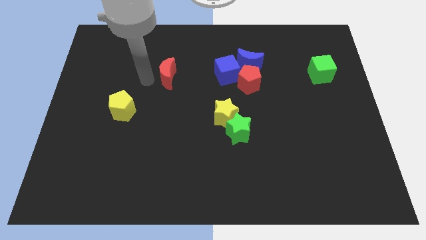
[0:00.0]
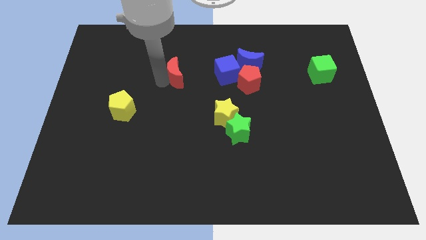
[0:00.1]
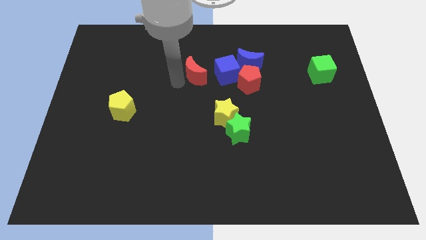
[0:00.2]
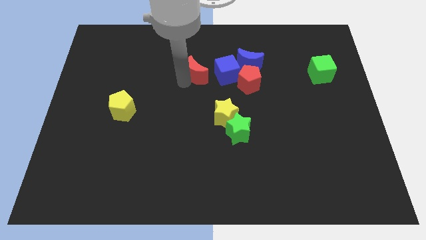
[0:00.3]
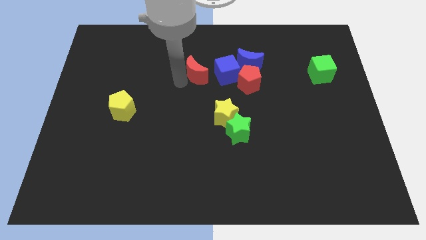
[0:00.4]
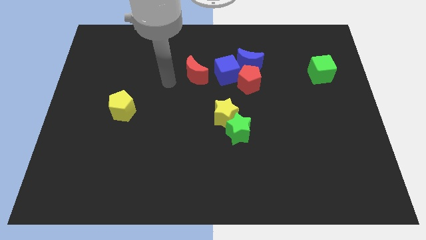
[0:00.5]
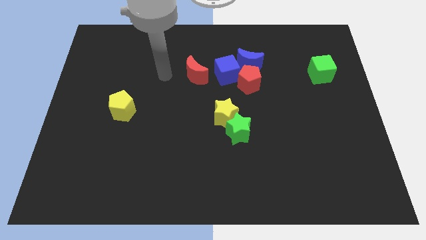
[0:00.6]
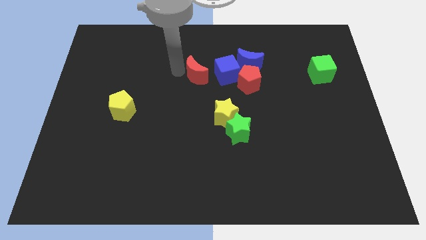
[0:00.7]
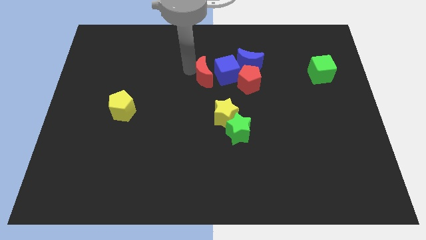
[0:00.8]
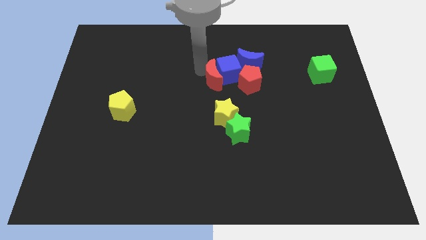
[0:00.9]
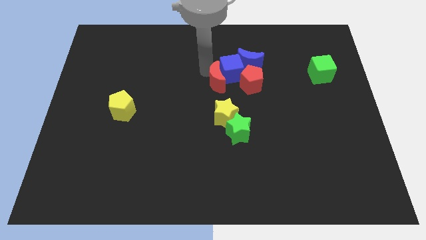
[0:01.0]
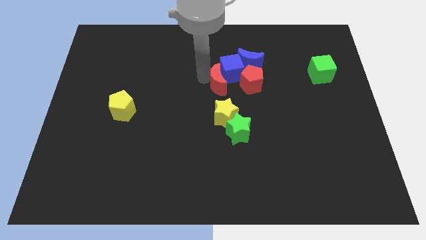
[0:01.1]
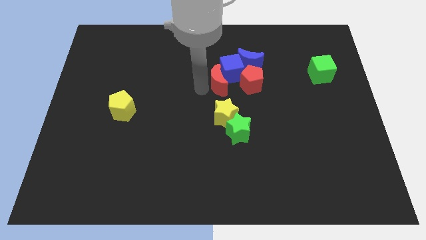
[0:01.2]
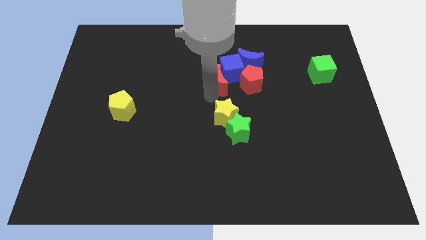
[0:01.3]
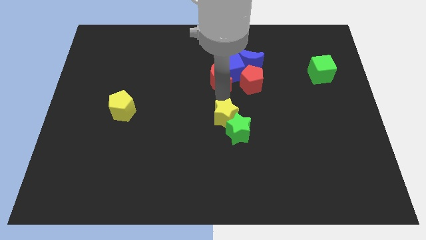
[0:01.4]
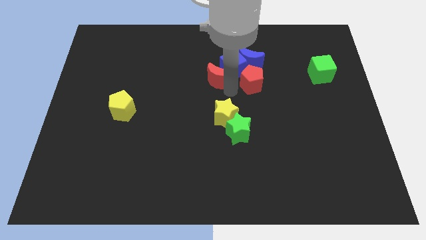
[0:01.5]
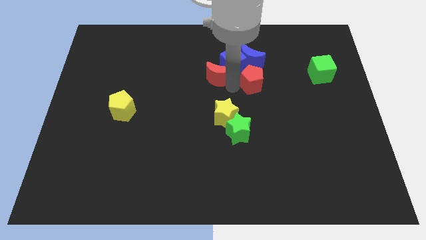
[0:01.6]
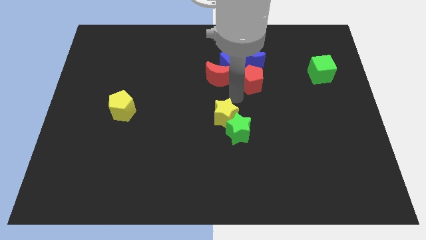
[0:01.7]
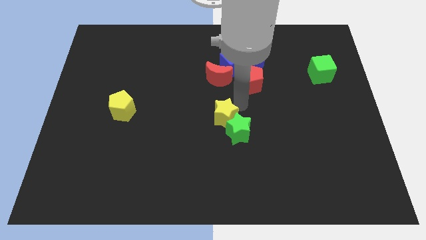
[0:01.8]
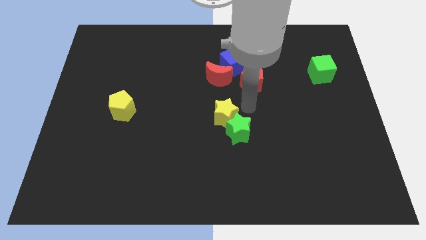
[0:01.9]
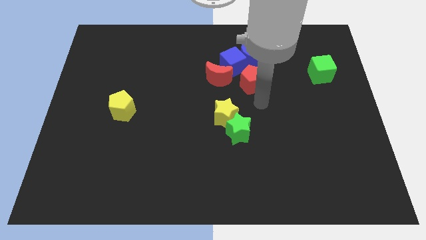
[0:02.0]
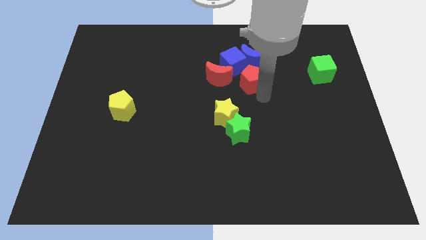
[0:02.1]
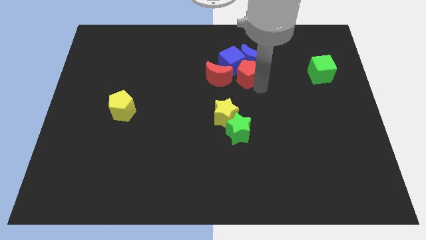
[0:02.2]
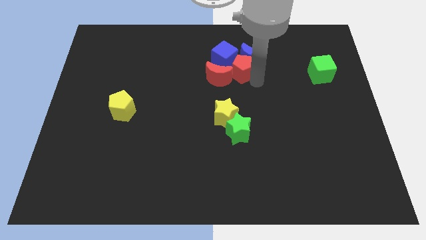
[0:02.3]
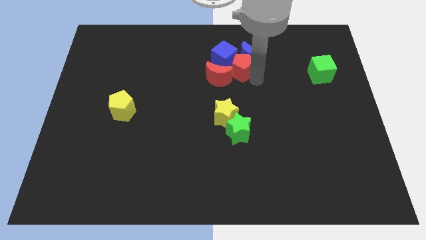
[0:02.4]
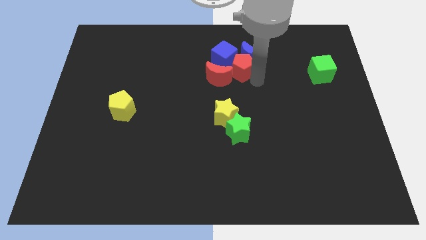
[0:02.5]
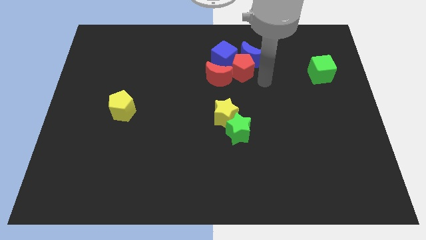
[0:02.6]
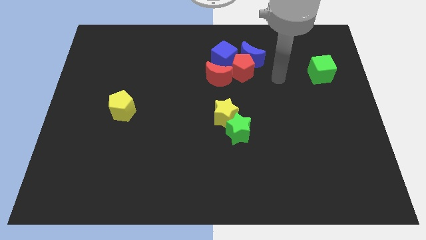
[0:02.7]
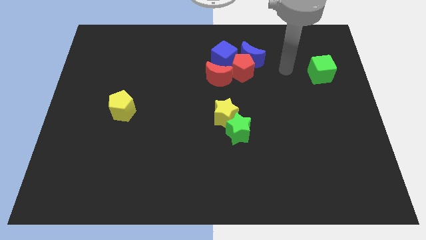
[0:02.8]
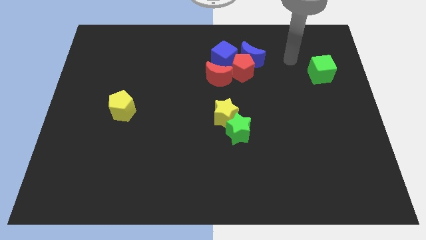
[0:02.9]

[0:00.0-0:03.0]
adjust the group of blocks at the top side of the board

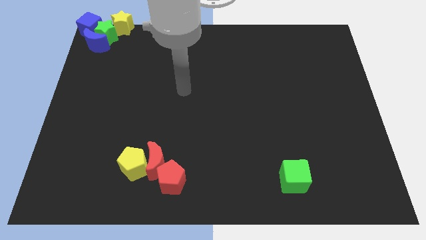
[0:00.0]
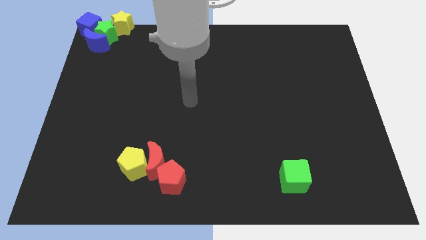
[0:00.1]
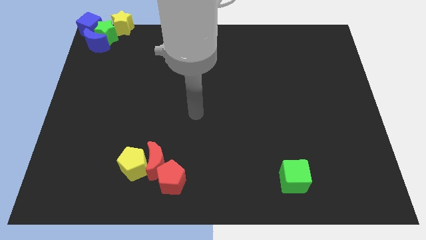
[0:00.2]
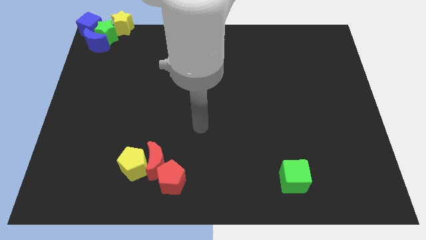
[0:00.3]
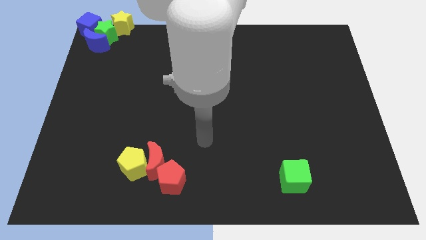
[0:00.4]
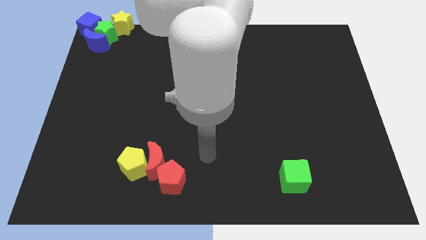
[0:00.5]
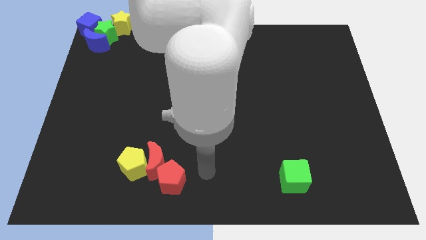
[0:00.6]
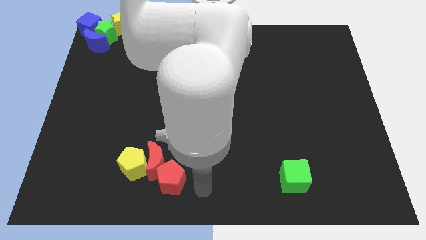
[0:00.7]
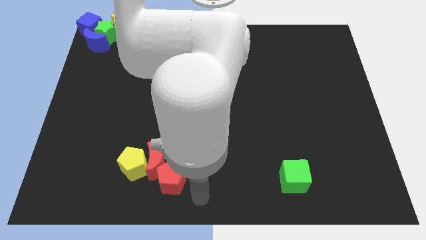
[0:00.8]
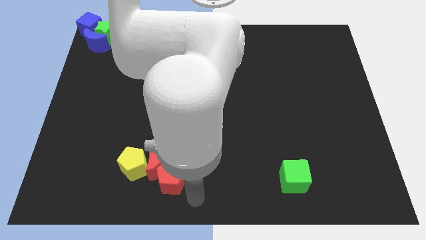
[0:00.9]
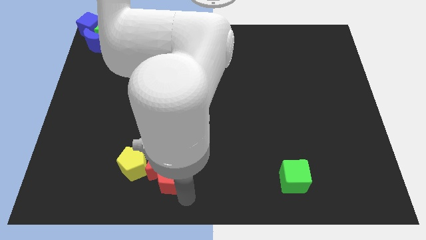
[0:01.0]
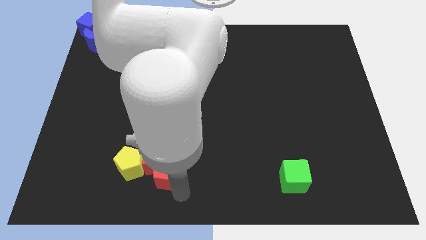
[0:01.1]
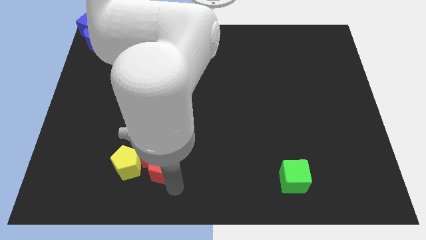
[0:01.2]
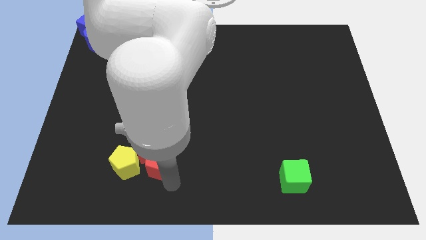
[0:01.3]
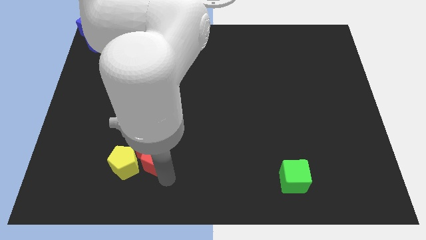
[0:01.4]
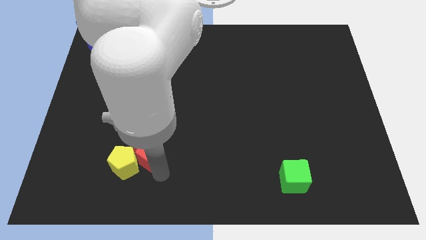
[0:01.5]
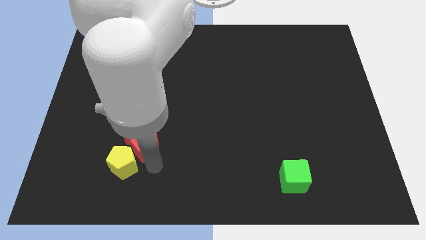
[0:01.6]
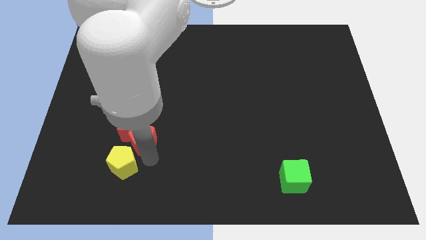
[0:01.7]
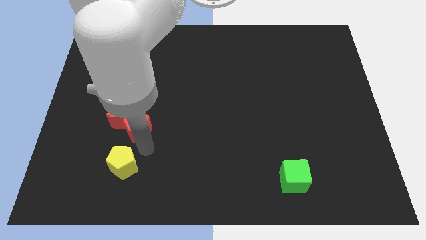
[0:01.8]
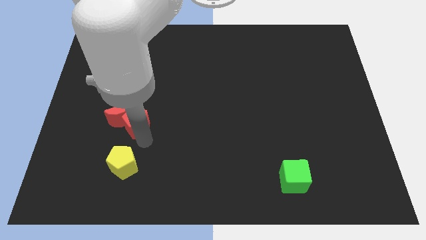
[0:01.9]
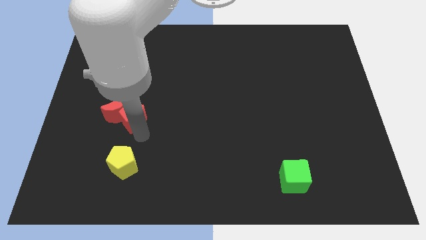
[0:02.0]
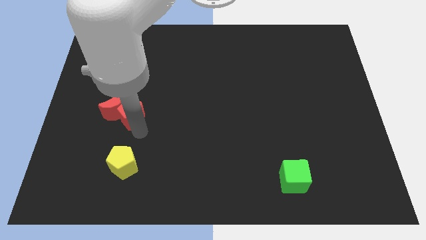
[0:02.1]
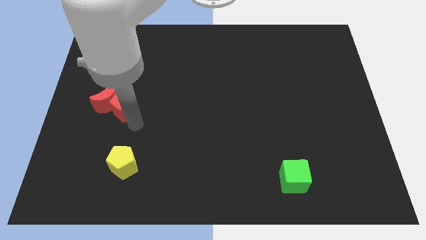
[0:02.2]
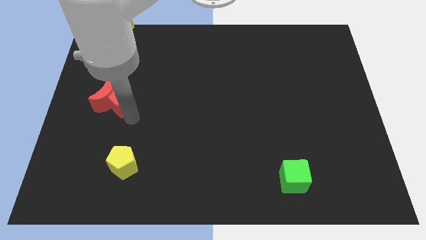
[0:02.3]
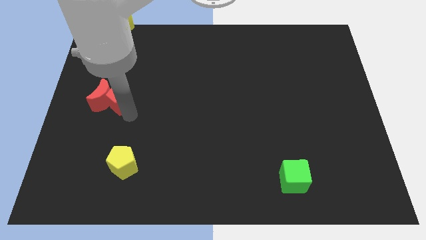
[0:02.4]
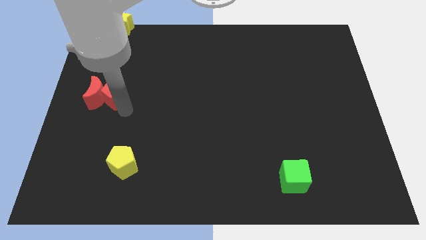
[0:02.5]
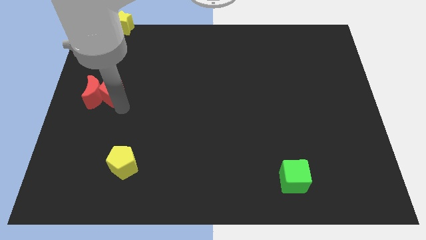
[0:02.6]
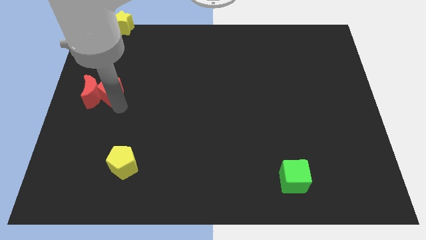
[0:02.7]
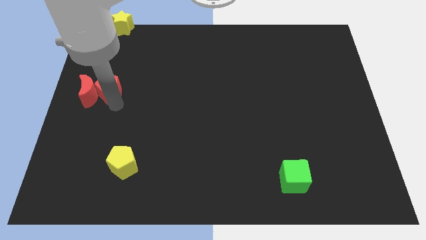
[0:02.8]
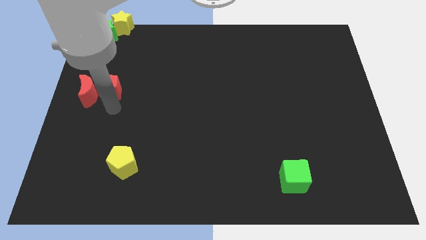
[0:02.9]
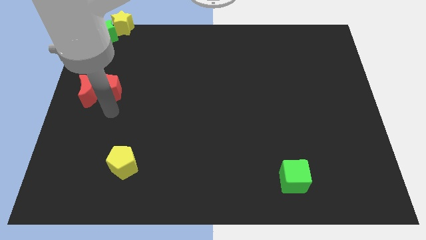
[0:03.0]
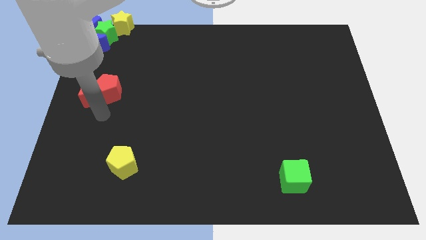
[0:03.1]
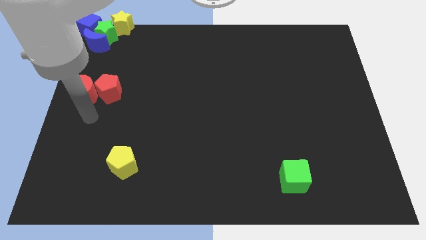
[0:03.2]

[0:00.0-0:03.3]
separate red blocks from the yellow pentagon

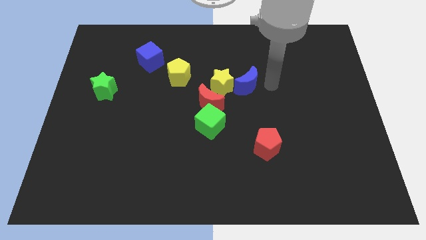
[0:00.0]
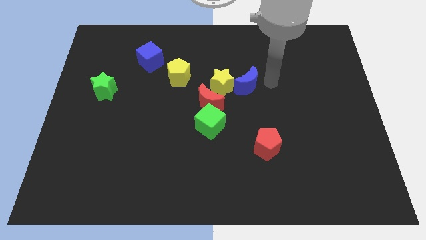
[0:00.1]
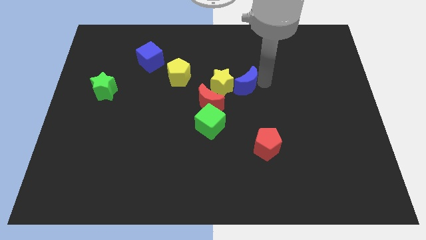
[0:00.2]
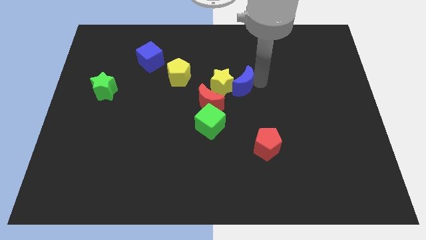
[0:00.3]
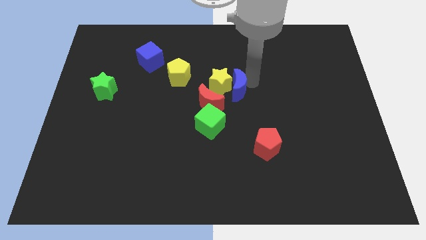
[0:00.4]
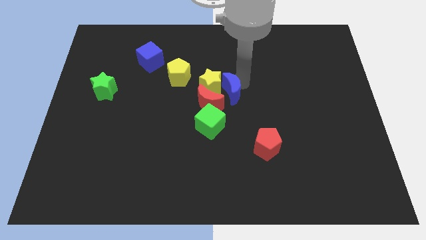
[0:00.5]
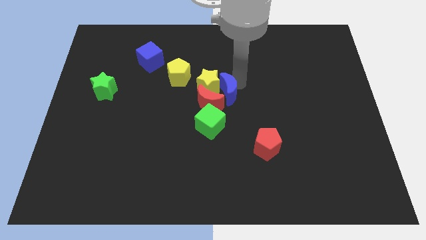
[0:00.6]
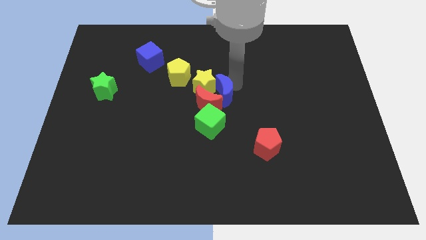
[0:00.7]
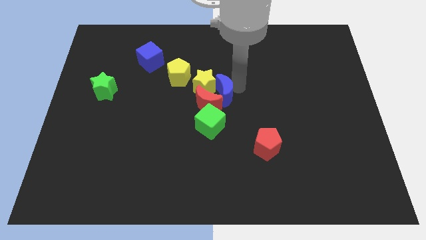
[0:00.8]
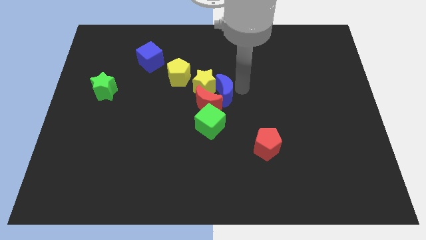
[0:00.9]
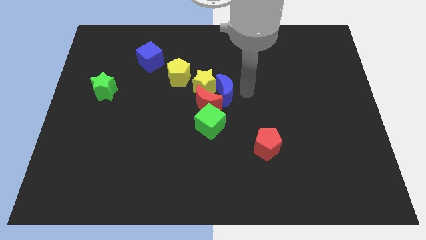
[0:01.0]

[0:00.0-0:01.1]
push the blue moon into the yellow star

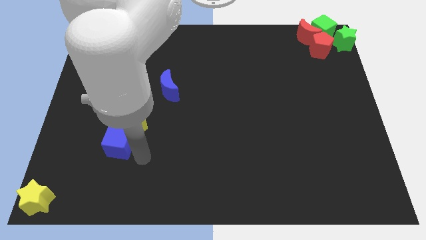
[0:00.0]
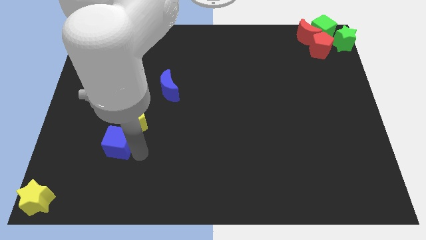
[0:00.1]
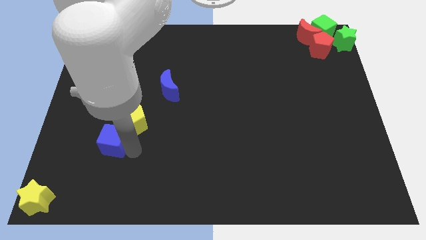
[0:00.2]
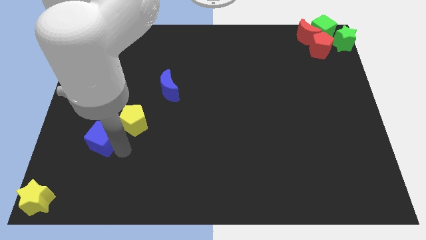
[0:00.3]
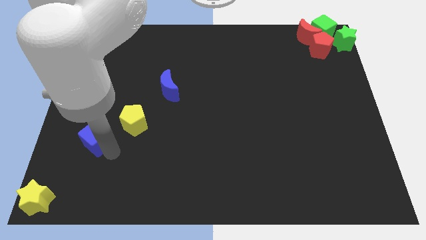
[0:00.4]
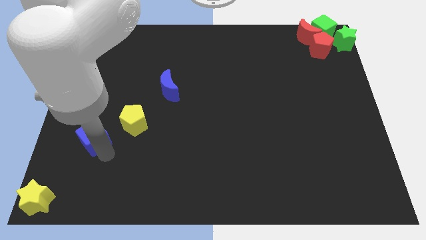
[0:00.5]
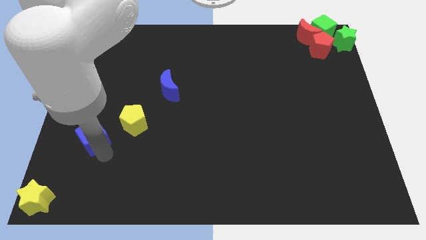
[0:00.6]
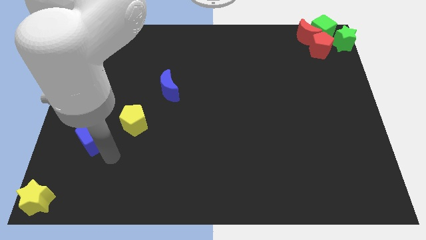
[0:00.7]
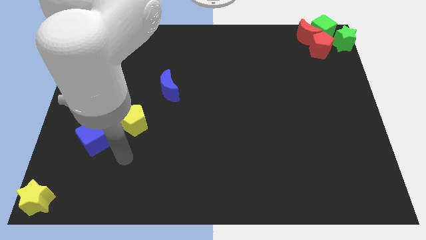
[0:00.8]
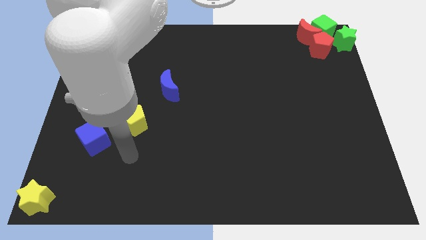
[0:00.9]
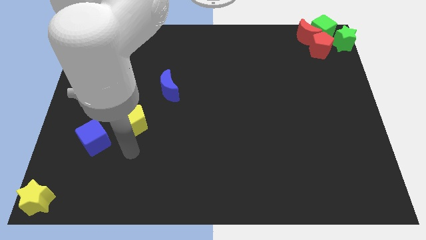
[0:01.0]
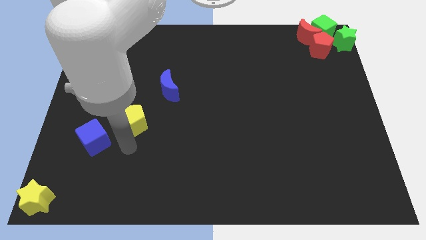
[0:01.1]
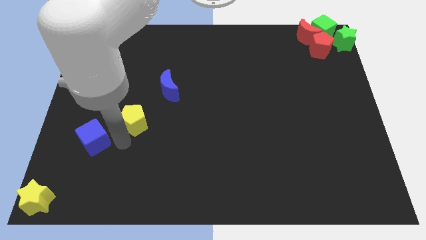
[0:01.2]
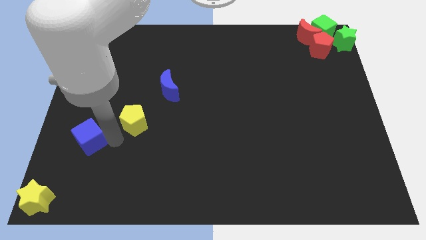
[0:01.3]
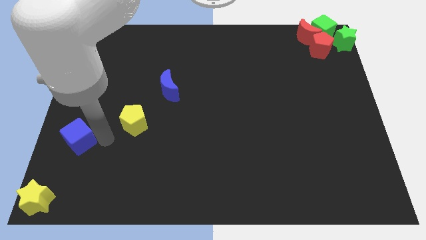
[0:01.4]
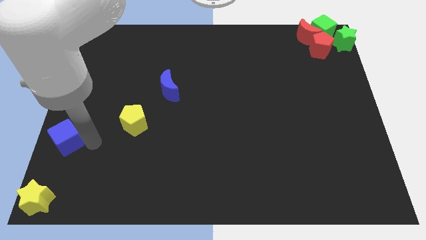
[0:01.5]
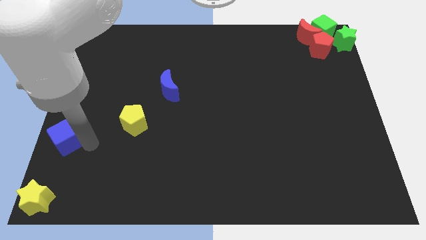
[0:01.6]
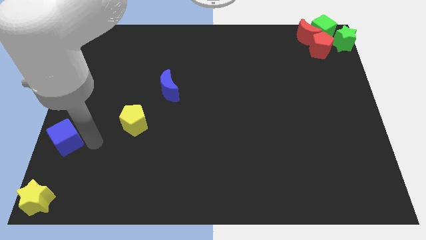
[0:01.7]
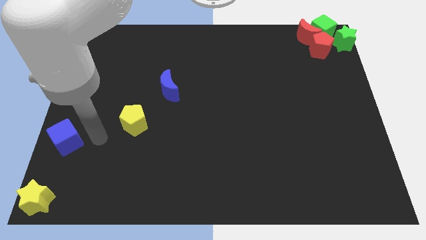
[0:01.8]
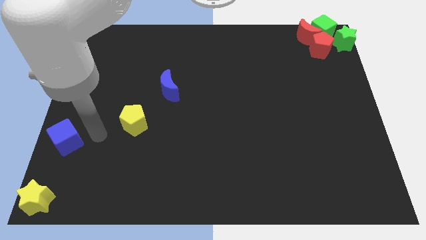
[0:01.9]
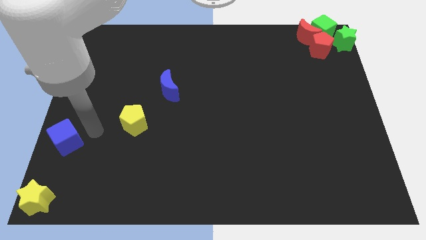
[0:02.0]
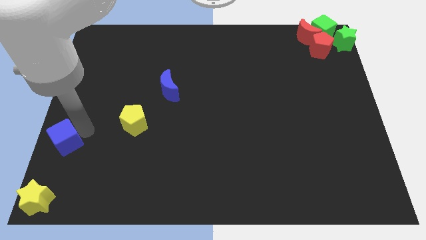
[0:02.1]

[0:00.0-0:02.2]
place the blue cube above the yellow star
